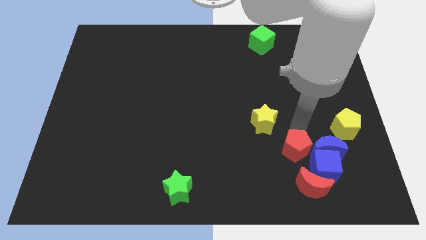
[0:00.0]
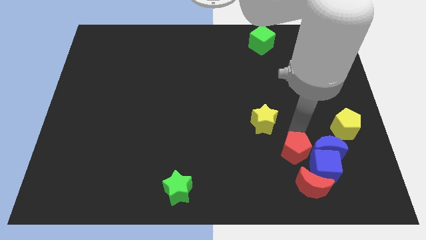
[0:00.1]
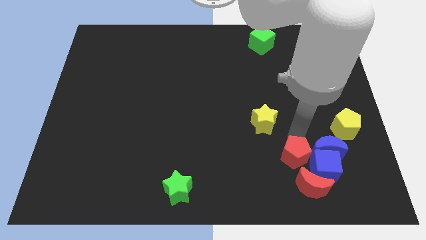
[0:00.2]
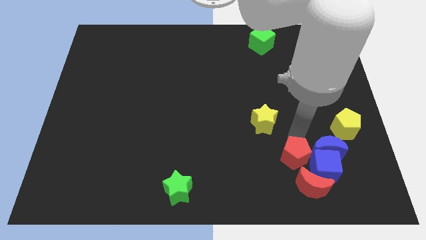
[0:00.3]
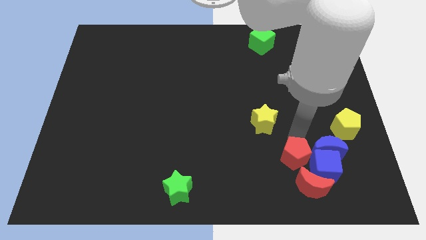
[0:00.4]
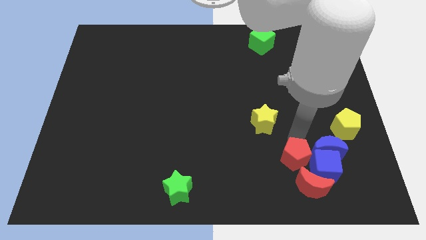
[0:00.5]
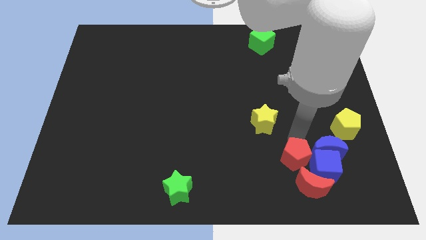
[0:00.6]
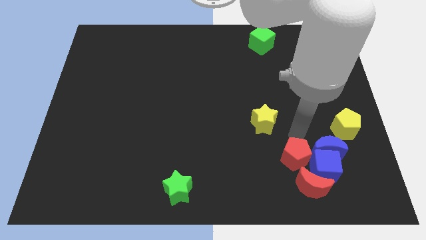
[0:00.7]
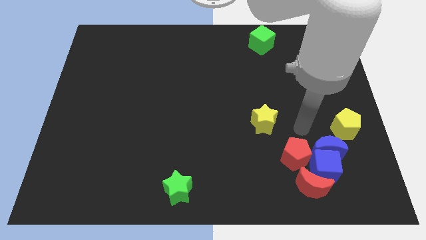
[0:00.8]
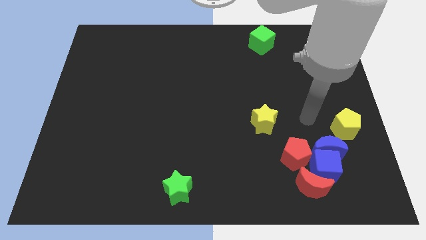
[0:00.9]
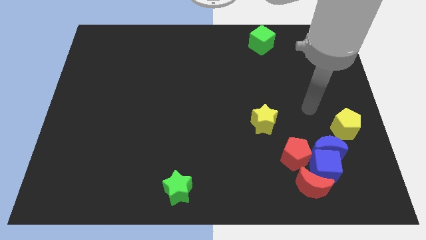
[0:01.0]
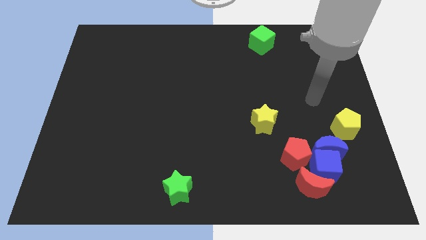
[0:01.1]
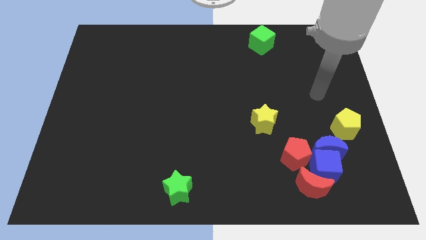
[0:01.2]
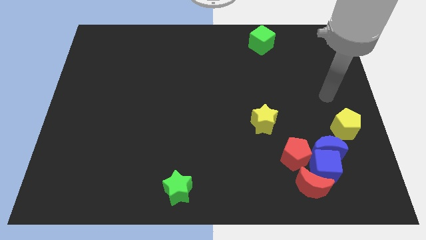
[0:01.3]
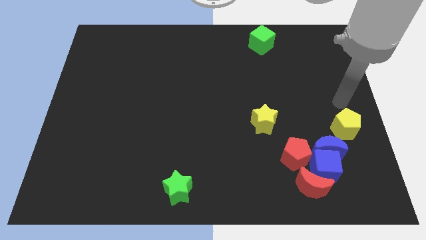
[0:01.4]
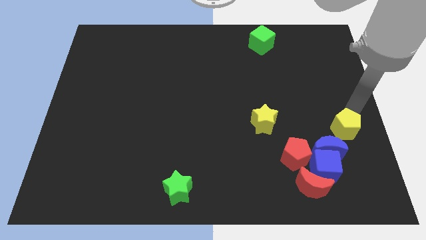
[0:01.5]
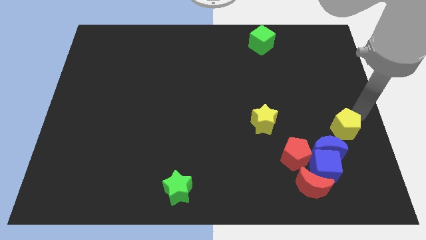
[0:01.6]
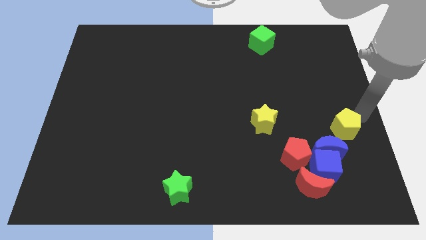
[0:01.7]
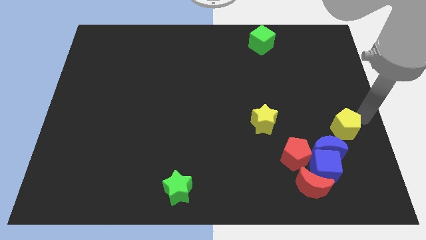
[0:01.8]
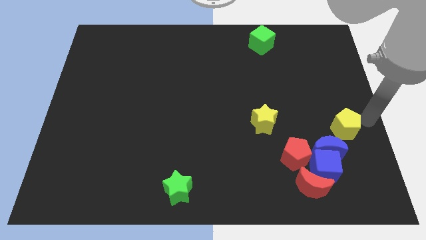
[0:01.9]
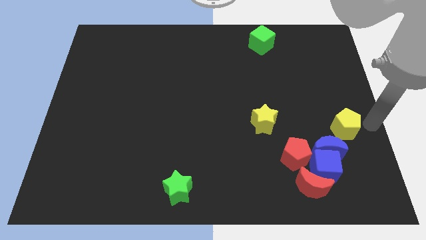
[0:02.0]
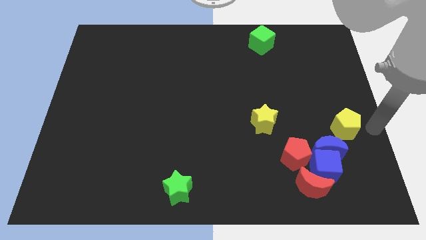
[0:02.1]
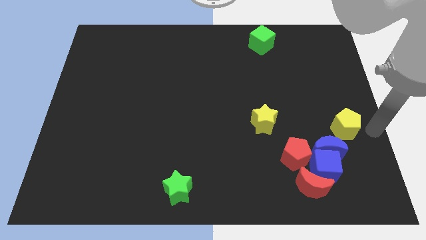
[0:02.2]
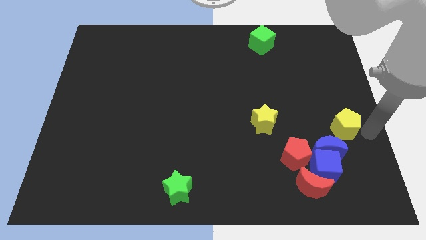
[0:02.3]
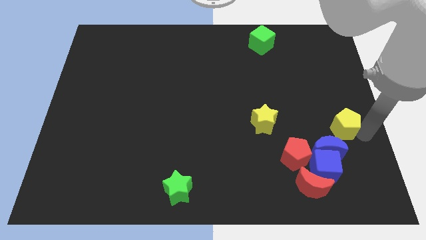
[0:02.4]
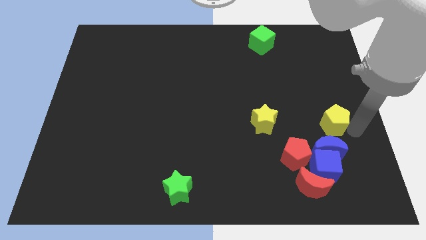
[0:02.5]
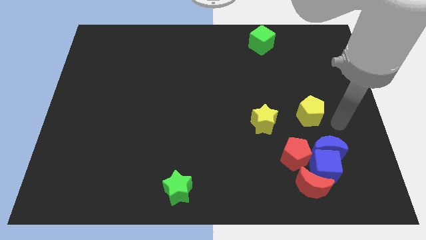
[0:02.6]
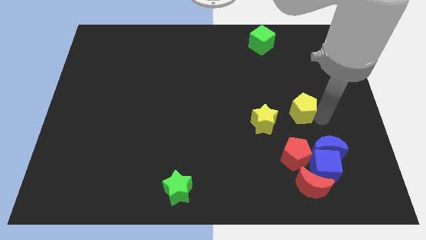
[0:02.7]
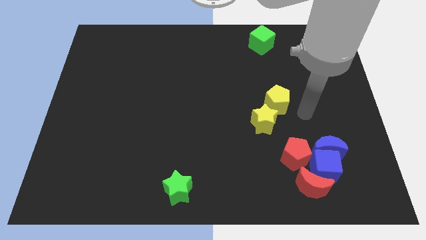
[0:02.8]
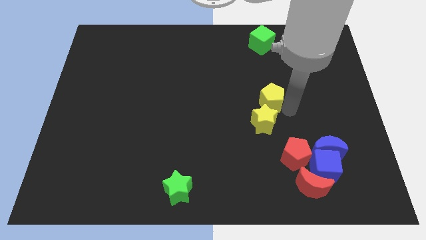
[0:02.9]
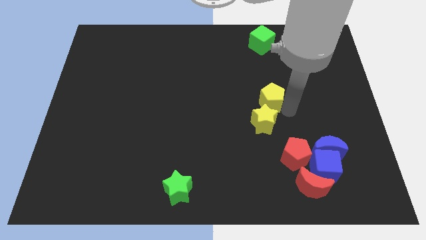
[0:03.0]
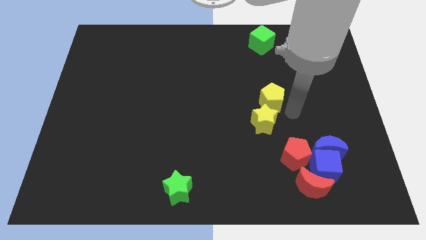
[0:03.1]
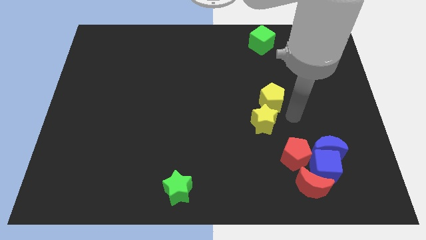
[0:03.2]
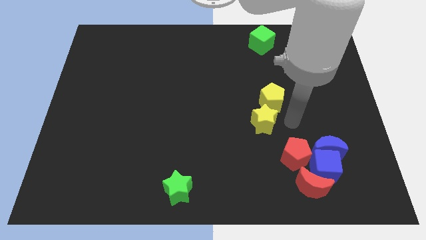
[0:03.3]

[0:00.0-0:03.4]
put the yellow pentagon on the top right side of the yellow star

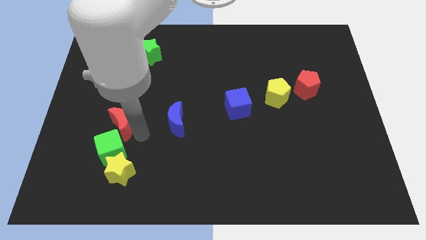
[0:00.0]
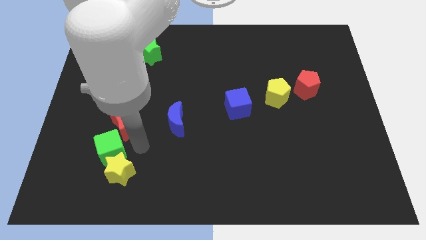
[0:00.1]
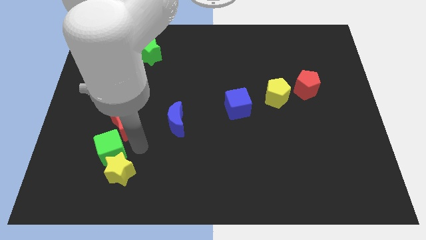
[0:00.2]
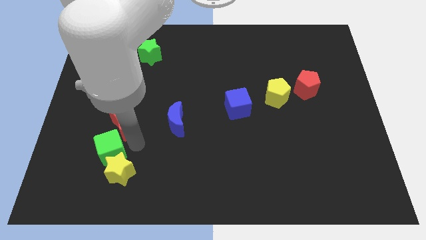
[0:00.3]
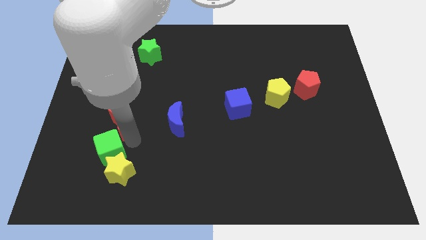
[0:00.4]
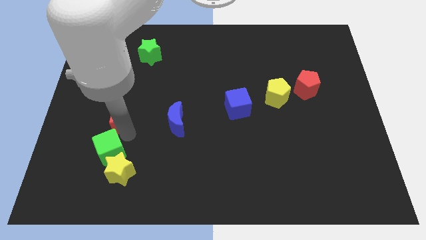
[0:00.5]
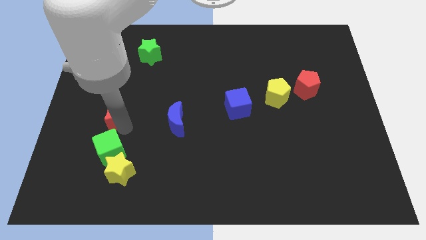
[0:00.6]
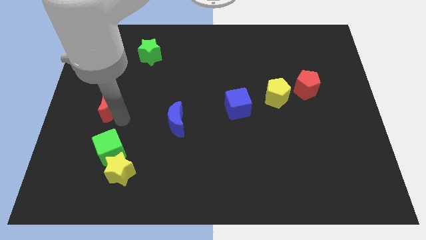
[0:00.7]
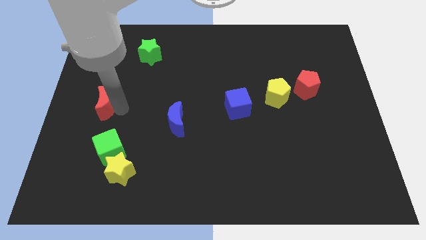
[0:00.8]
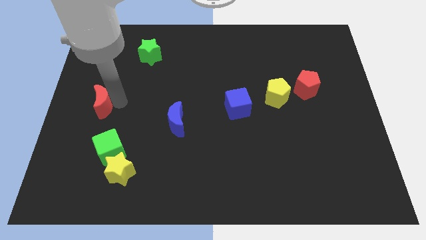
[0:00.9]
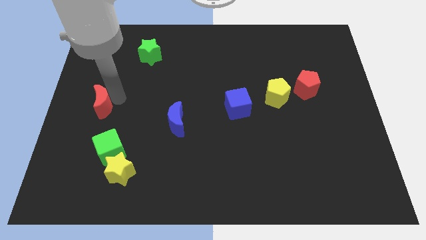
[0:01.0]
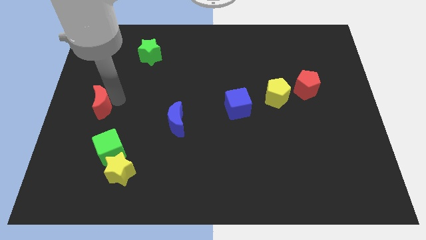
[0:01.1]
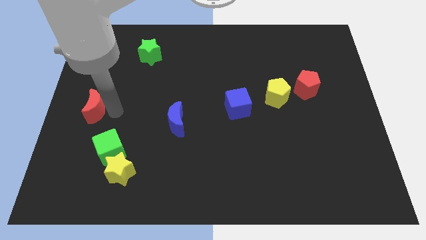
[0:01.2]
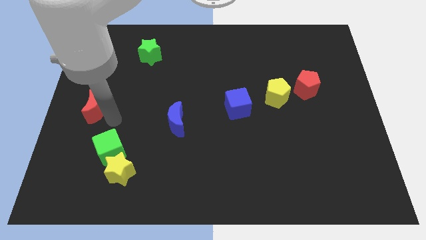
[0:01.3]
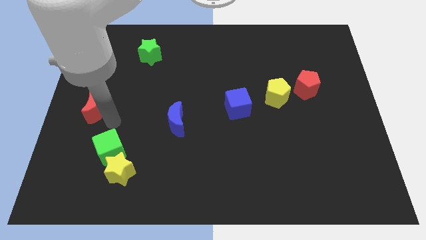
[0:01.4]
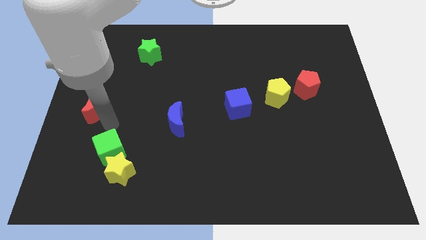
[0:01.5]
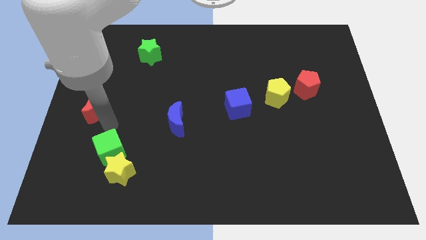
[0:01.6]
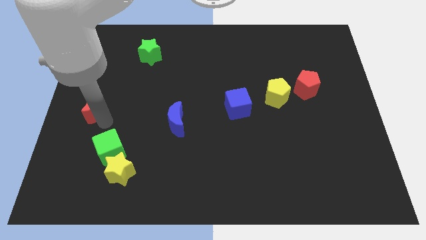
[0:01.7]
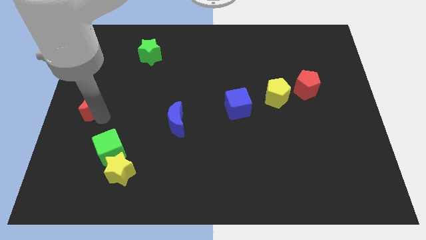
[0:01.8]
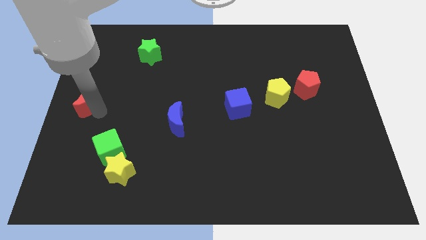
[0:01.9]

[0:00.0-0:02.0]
separate green cube and red moon

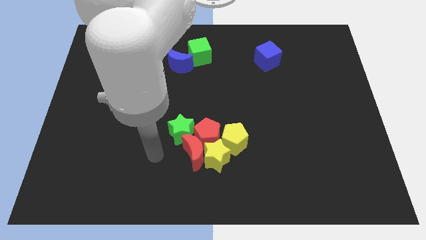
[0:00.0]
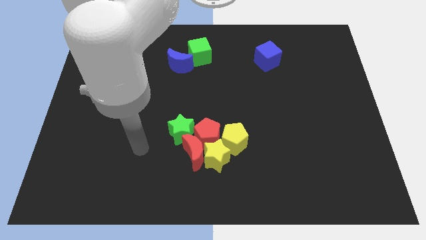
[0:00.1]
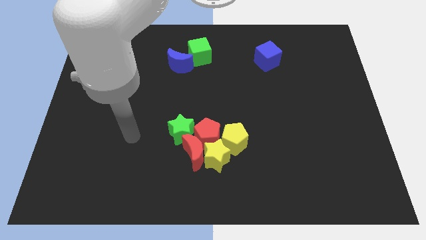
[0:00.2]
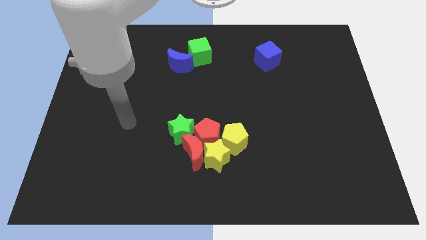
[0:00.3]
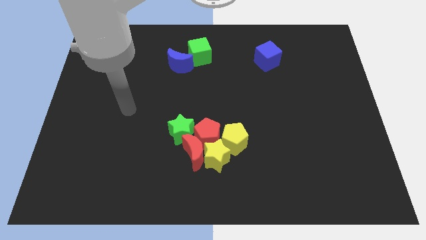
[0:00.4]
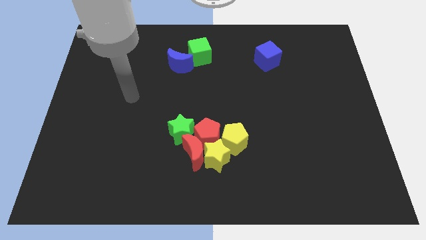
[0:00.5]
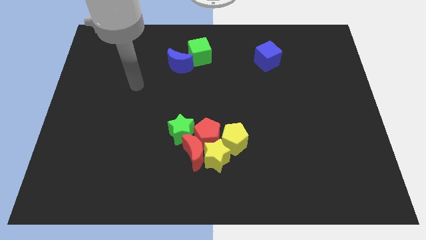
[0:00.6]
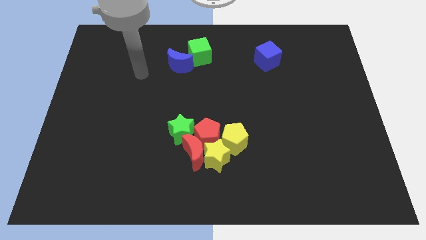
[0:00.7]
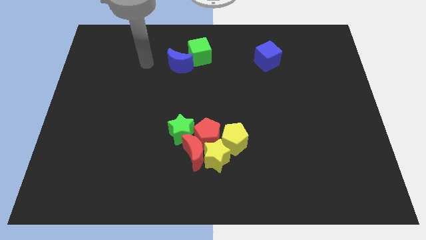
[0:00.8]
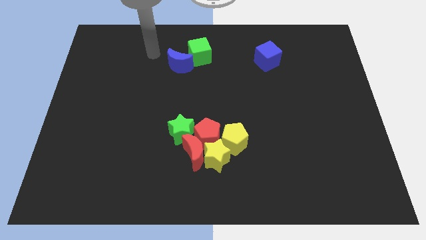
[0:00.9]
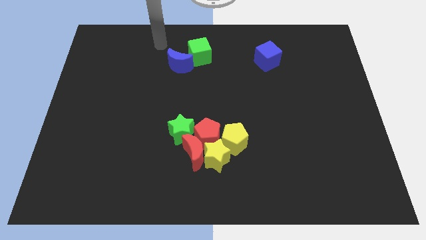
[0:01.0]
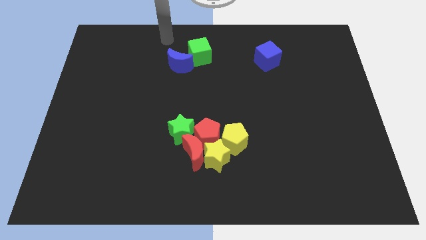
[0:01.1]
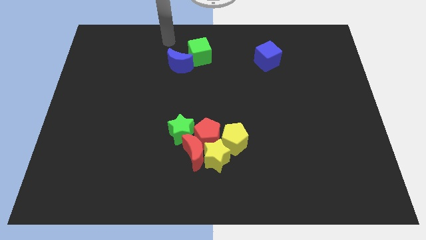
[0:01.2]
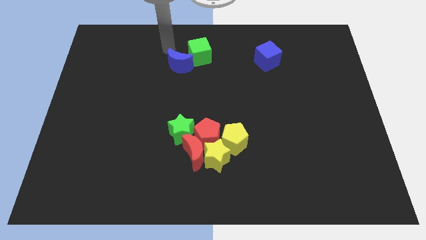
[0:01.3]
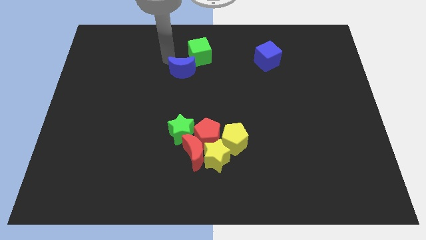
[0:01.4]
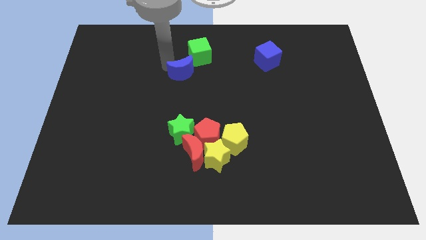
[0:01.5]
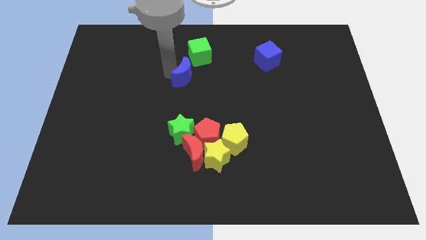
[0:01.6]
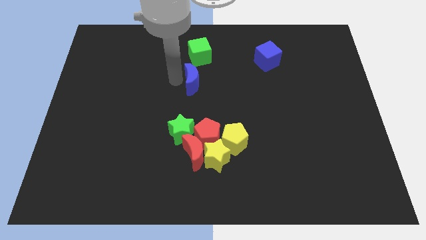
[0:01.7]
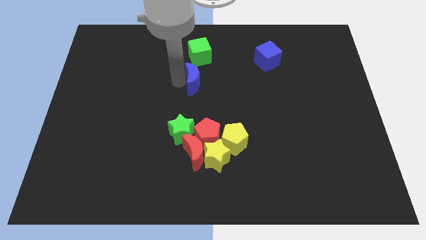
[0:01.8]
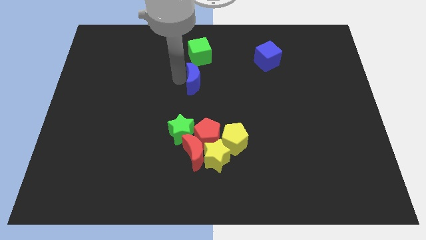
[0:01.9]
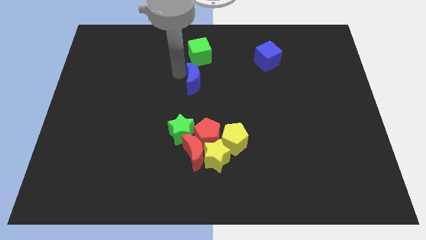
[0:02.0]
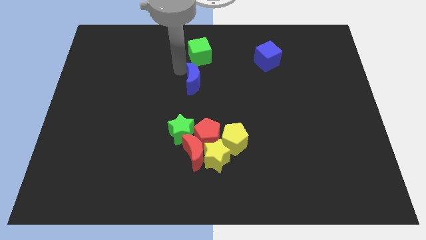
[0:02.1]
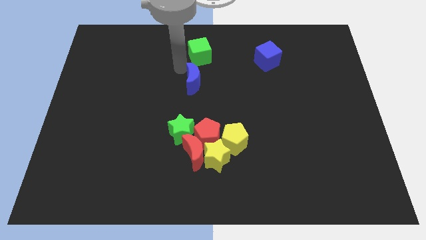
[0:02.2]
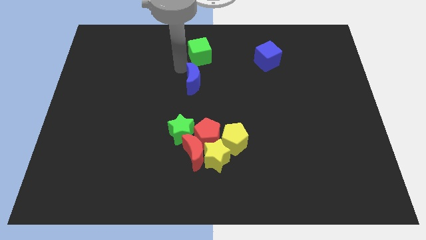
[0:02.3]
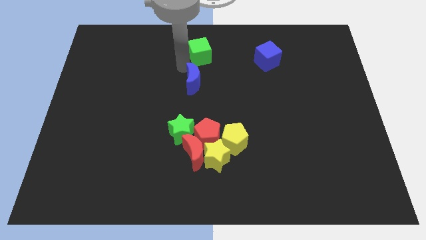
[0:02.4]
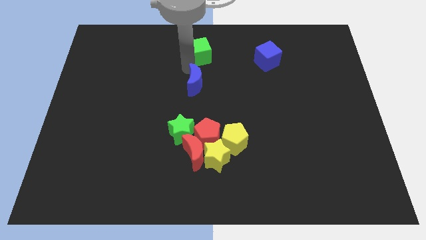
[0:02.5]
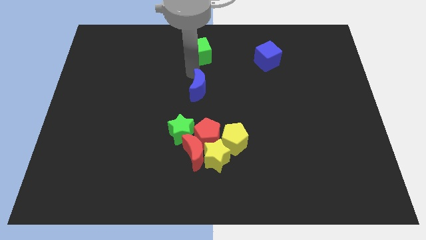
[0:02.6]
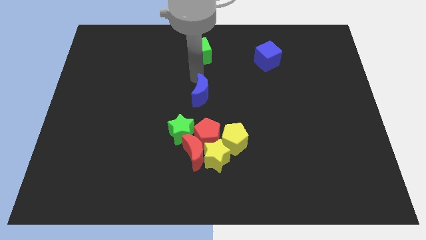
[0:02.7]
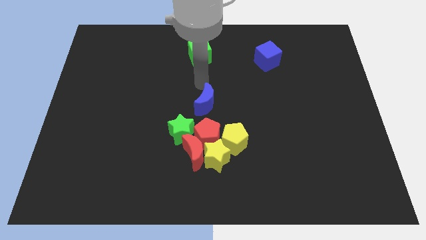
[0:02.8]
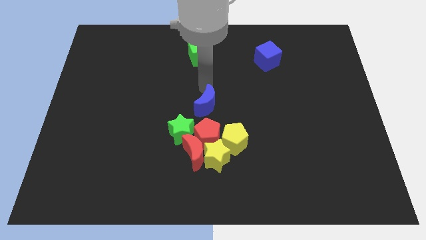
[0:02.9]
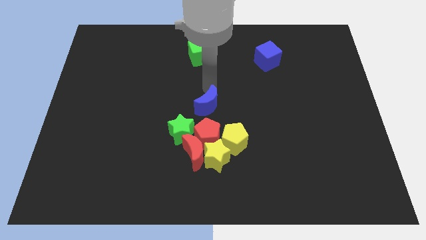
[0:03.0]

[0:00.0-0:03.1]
place the blue moon above the red pentagon

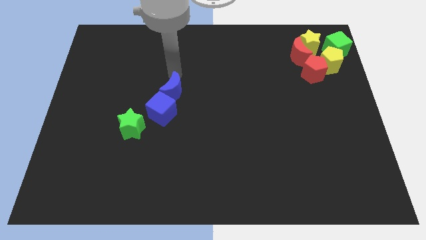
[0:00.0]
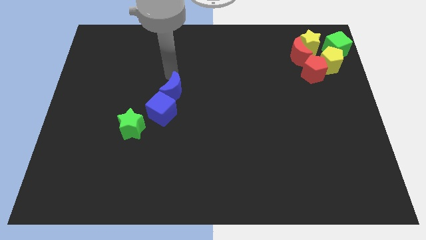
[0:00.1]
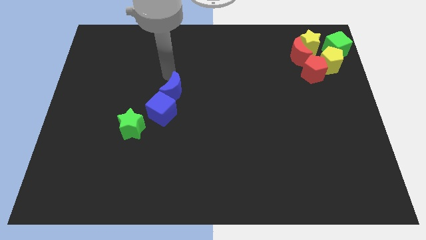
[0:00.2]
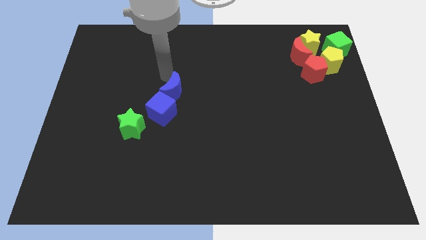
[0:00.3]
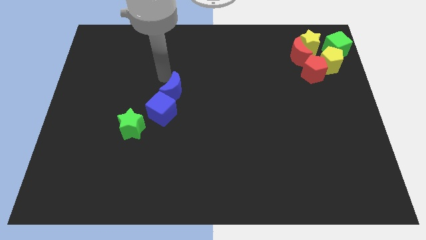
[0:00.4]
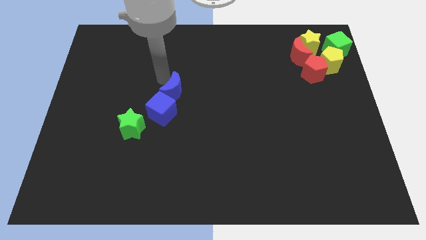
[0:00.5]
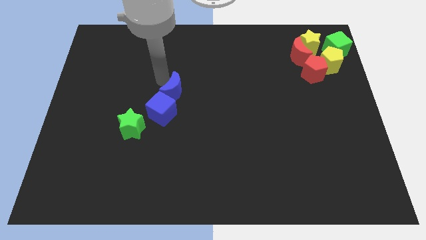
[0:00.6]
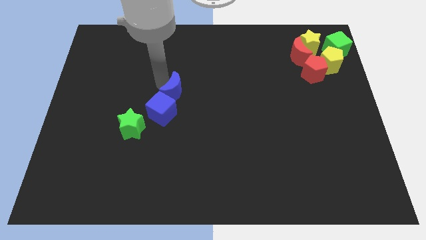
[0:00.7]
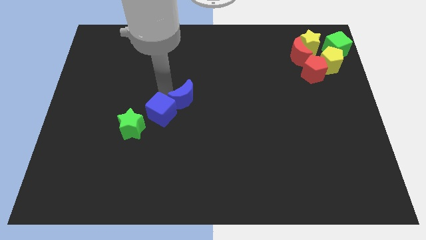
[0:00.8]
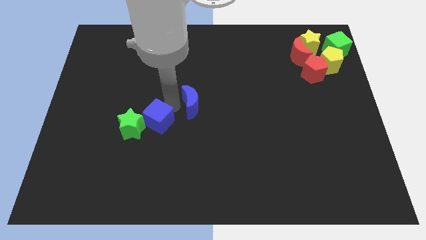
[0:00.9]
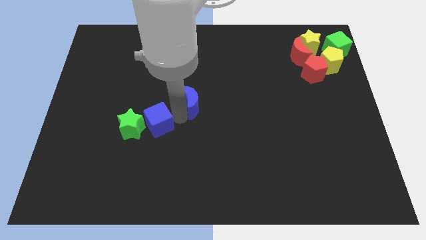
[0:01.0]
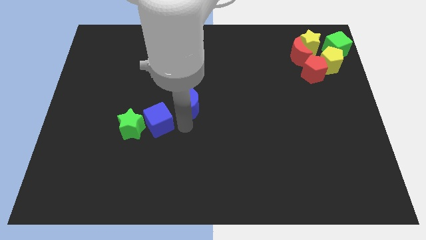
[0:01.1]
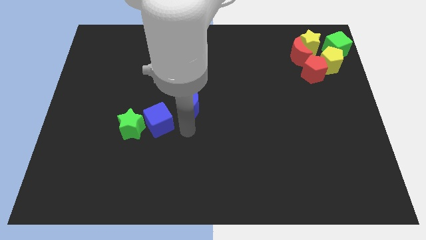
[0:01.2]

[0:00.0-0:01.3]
separate blue moon from blue cube
